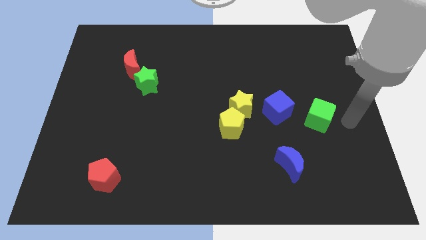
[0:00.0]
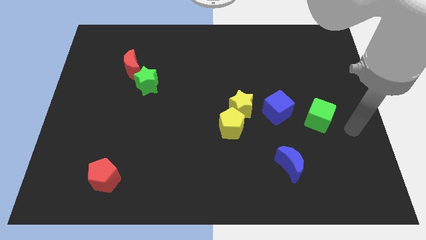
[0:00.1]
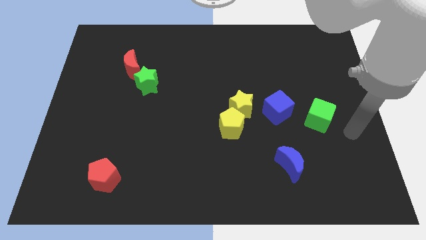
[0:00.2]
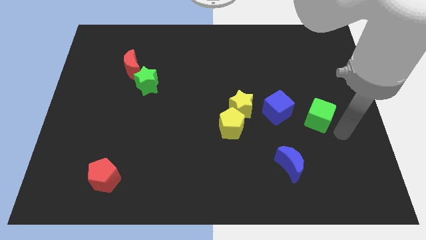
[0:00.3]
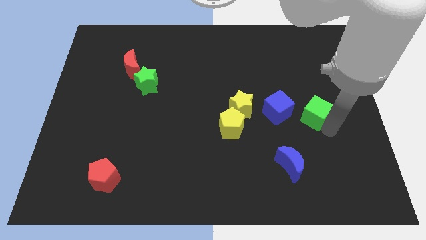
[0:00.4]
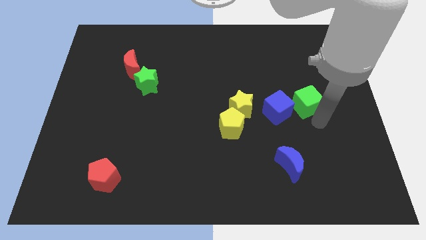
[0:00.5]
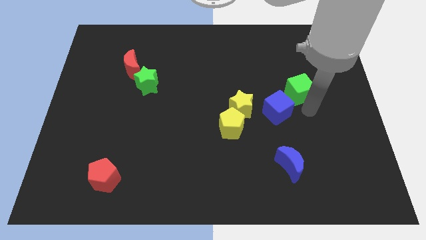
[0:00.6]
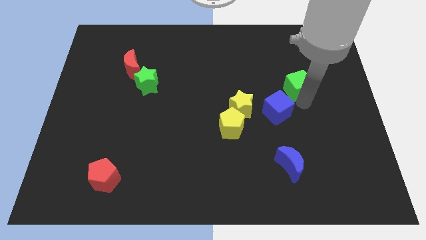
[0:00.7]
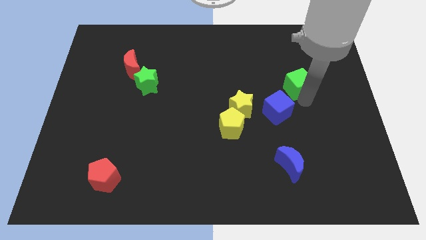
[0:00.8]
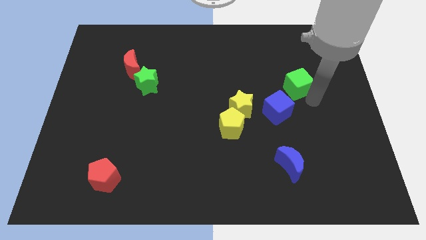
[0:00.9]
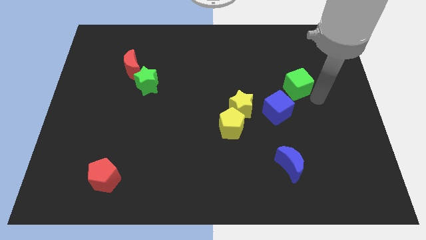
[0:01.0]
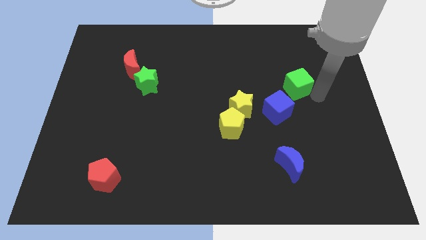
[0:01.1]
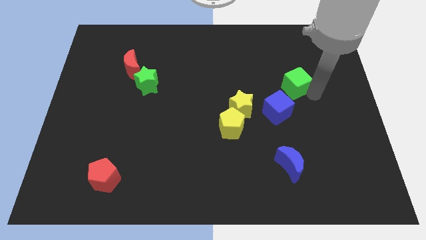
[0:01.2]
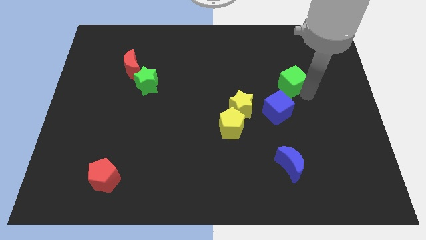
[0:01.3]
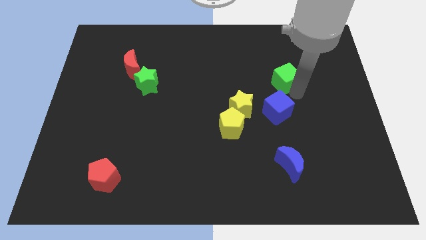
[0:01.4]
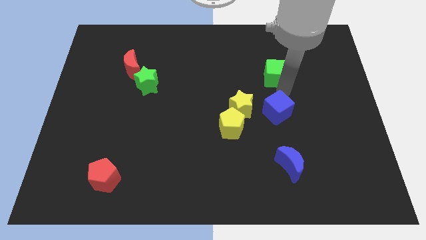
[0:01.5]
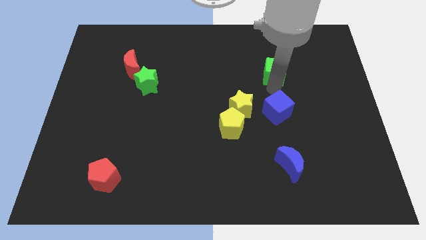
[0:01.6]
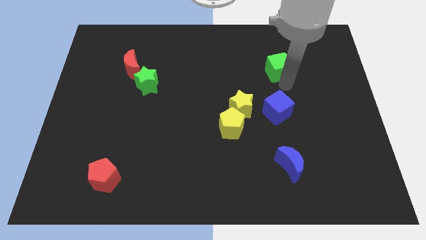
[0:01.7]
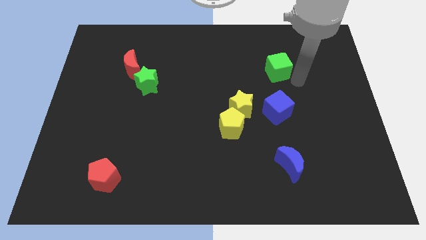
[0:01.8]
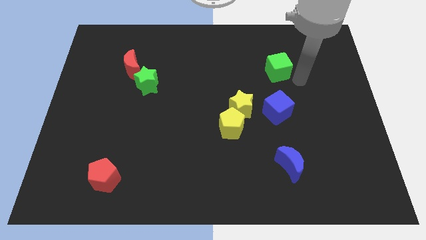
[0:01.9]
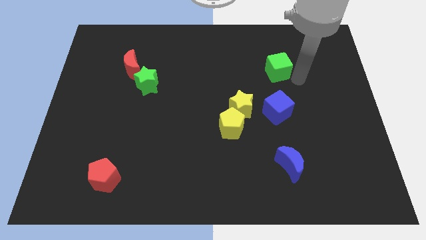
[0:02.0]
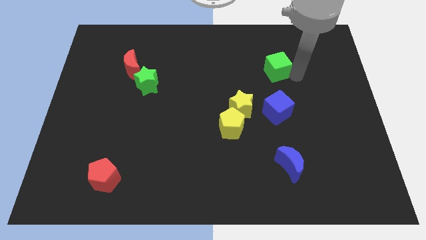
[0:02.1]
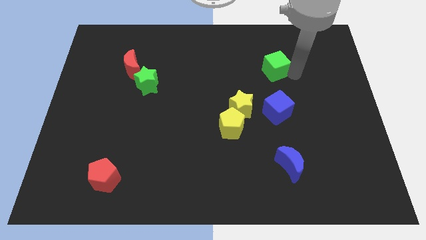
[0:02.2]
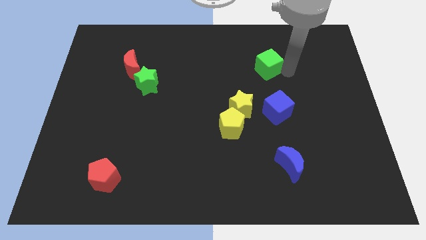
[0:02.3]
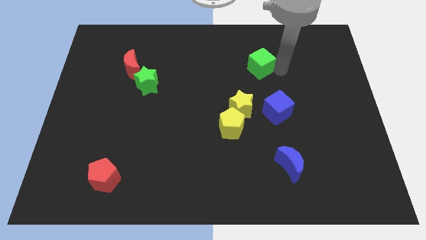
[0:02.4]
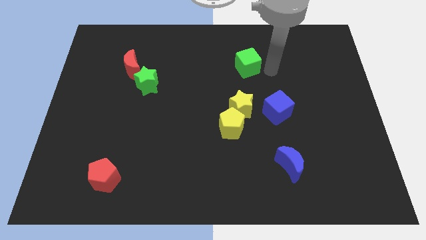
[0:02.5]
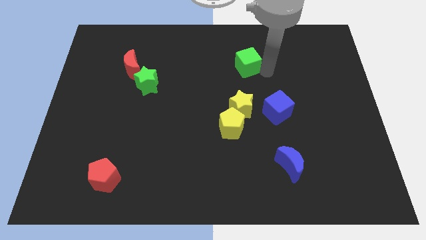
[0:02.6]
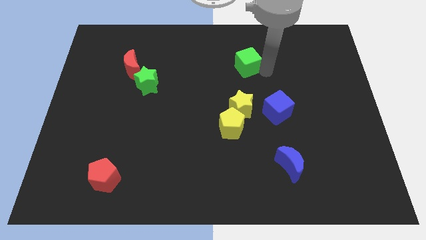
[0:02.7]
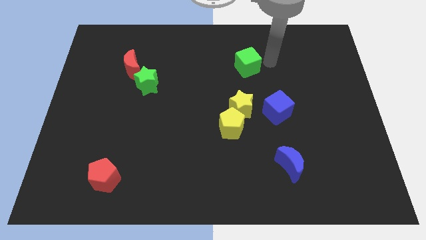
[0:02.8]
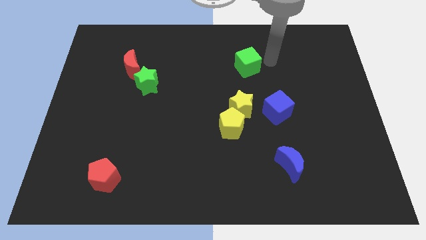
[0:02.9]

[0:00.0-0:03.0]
move the green cube above the yellow star

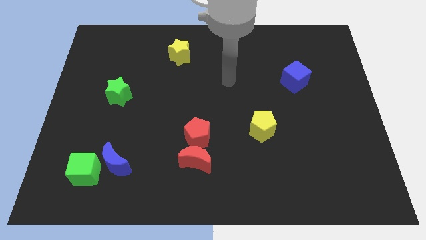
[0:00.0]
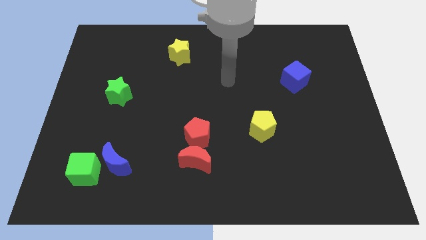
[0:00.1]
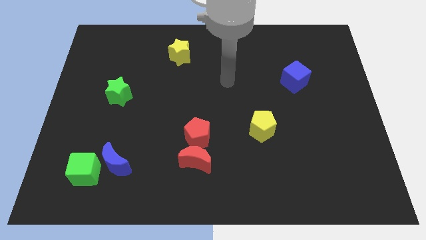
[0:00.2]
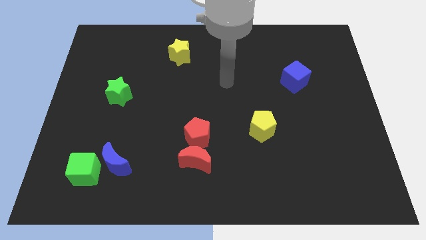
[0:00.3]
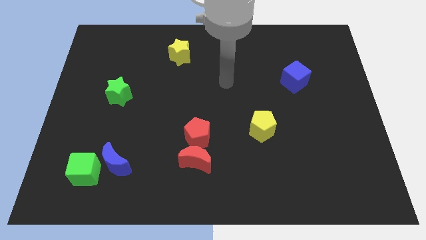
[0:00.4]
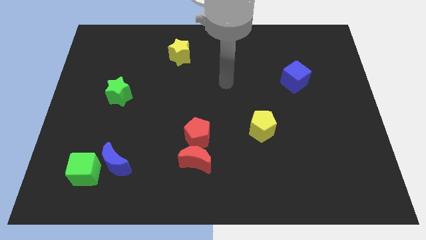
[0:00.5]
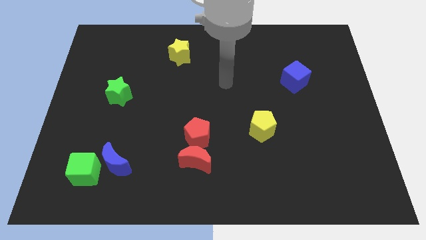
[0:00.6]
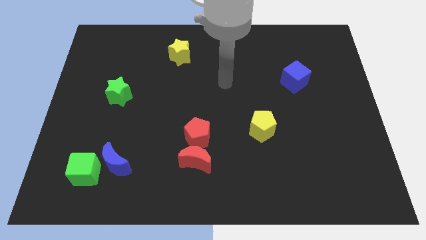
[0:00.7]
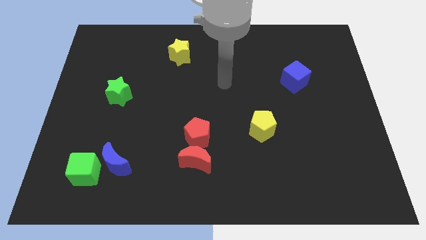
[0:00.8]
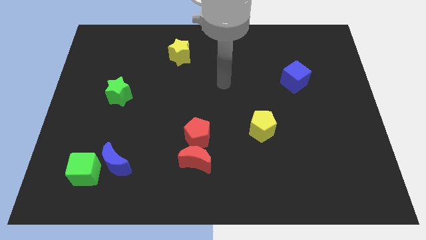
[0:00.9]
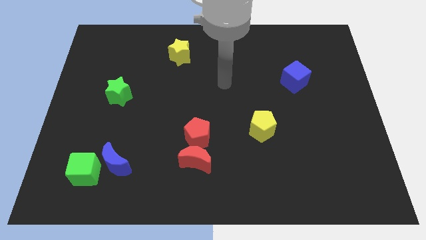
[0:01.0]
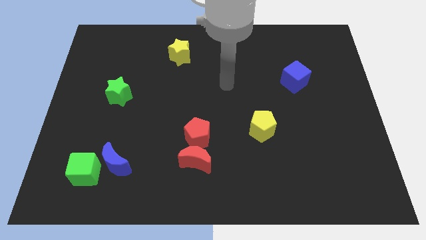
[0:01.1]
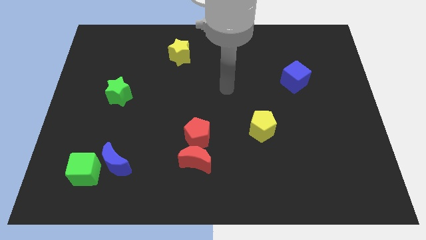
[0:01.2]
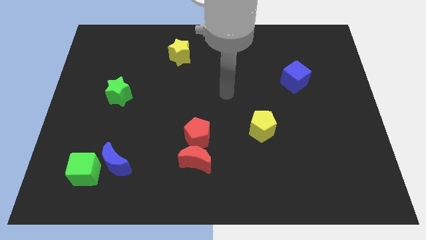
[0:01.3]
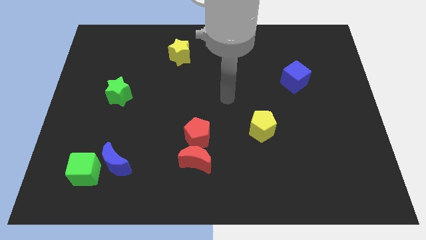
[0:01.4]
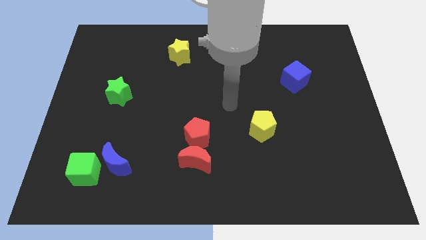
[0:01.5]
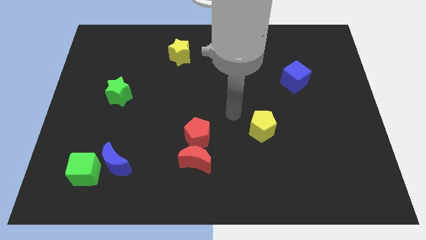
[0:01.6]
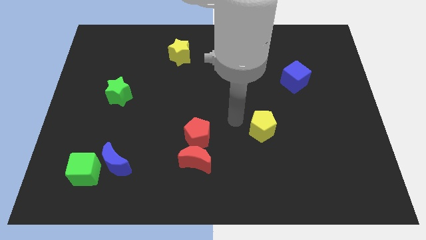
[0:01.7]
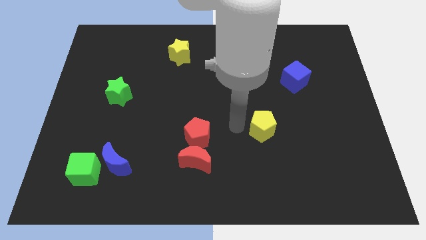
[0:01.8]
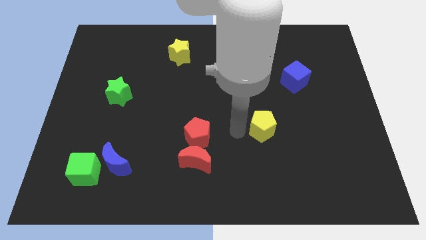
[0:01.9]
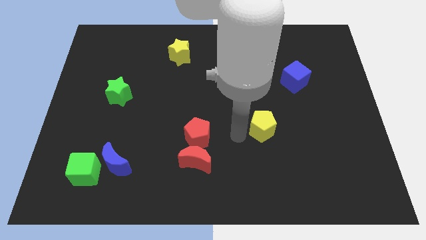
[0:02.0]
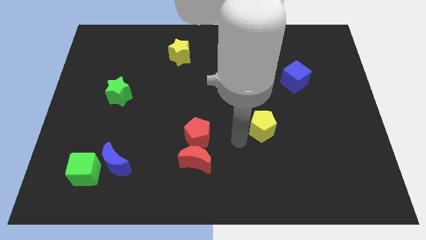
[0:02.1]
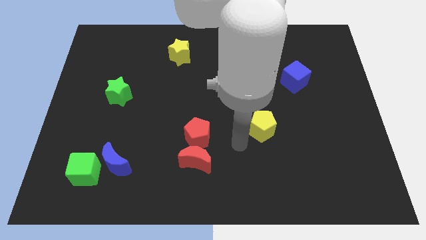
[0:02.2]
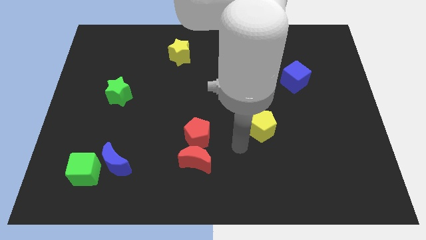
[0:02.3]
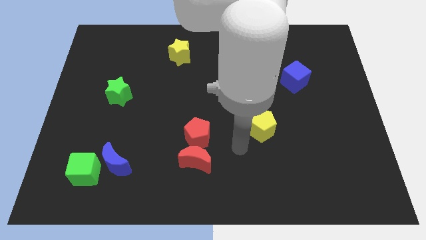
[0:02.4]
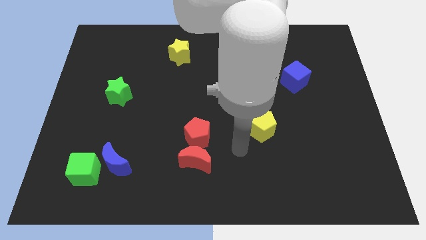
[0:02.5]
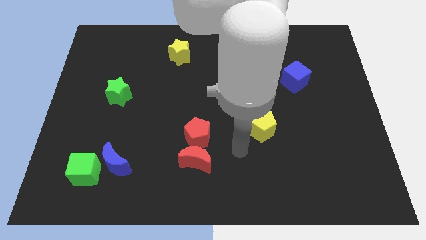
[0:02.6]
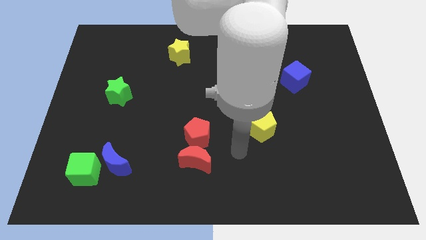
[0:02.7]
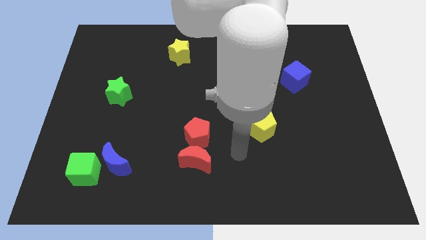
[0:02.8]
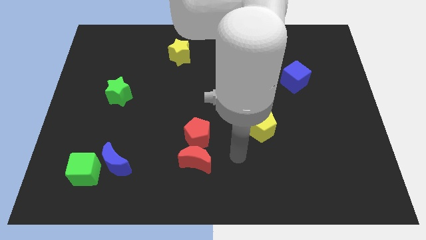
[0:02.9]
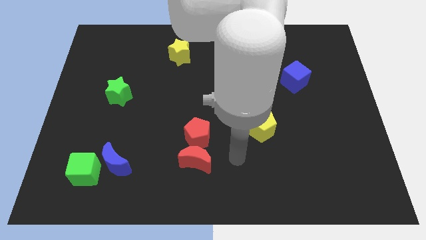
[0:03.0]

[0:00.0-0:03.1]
move your hand to right of red moon

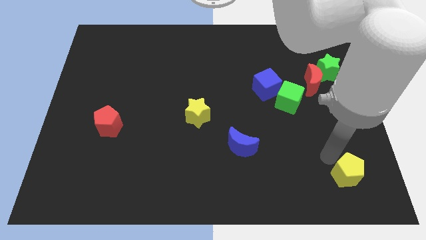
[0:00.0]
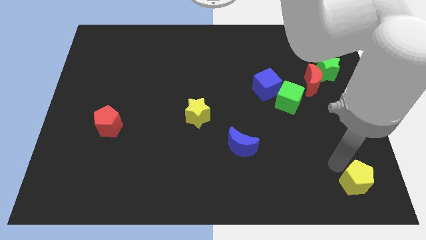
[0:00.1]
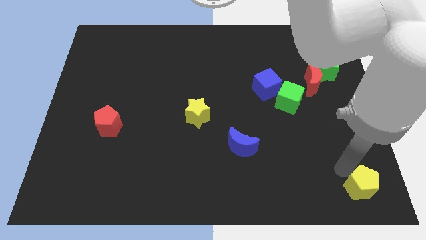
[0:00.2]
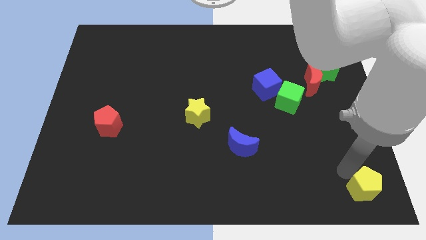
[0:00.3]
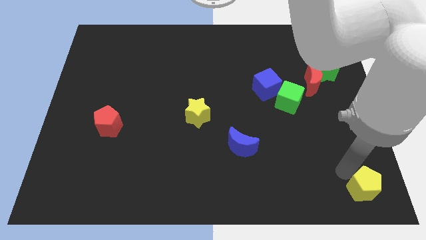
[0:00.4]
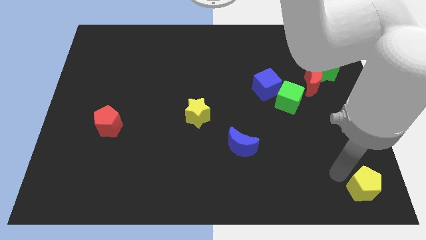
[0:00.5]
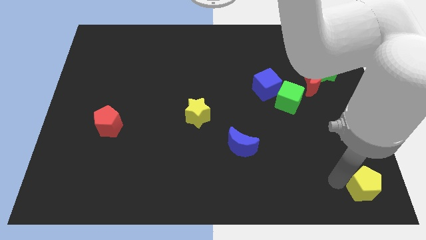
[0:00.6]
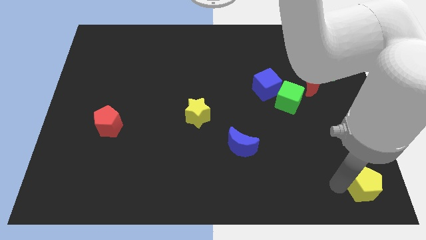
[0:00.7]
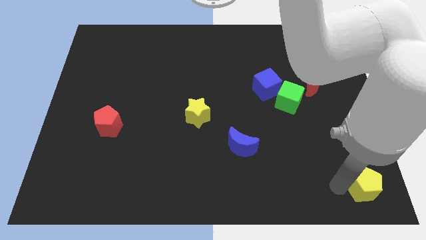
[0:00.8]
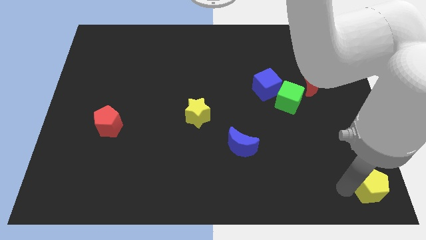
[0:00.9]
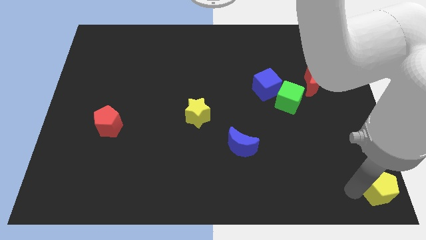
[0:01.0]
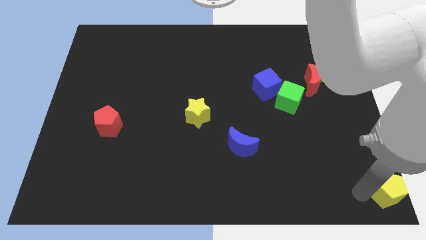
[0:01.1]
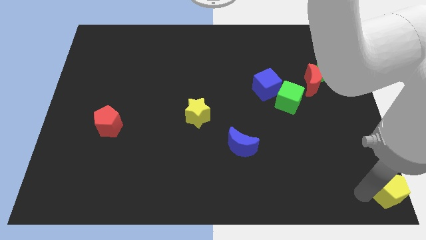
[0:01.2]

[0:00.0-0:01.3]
push the yellow pentagon towards the extreme right bottom of the board

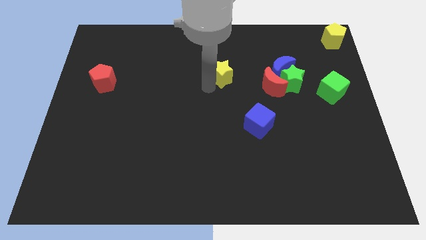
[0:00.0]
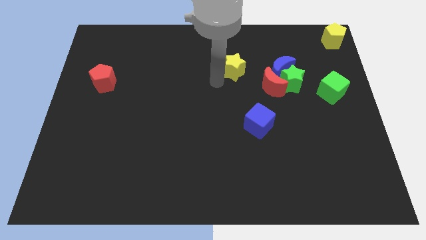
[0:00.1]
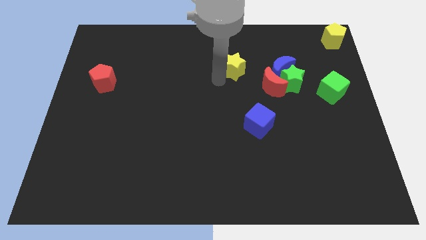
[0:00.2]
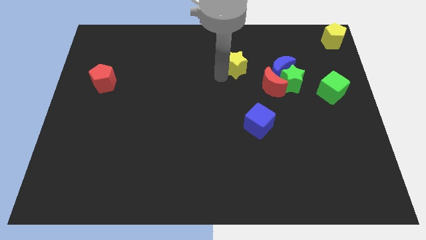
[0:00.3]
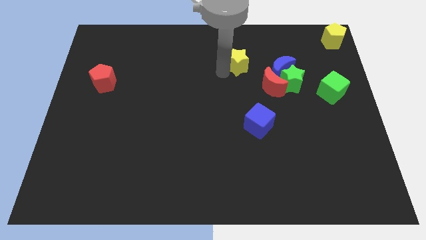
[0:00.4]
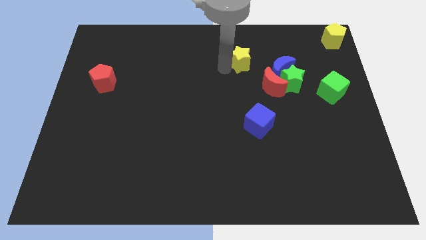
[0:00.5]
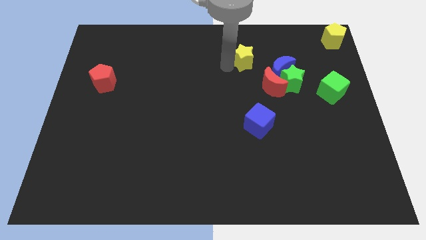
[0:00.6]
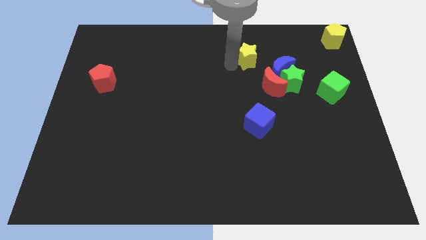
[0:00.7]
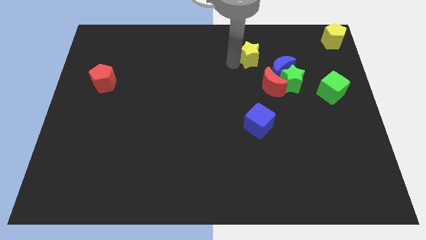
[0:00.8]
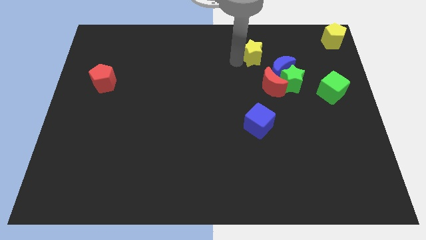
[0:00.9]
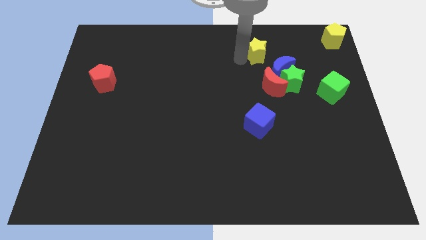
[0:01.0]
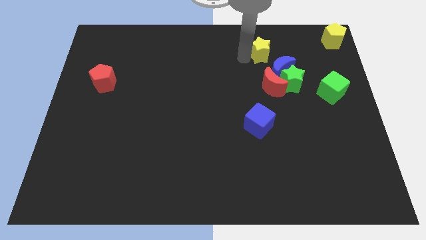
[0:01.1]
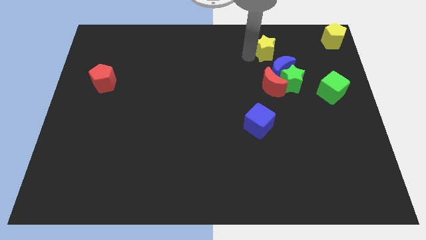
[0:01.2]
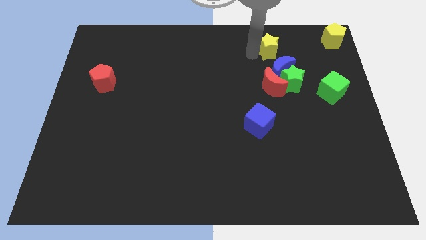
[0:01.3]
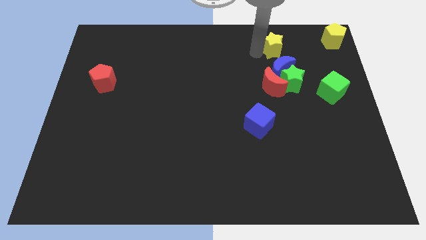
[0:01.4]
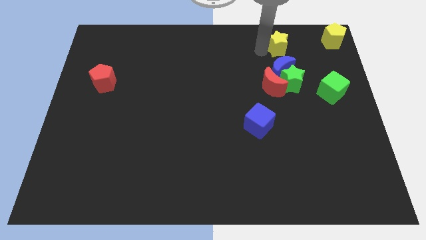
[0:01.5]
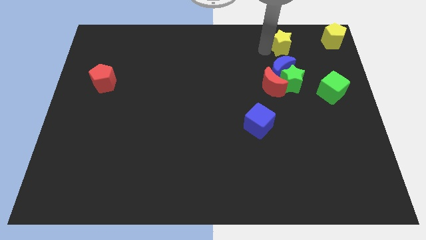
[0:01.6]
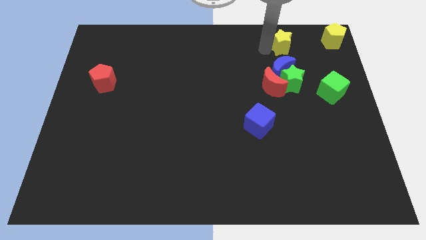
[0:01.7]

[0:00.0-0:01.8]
put the yellow star vertically to the top side of the blue moon
